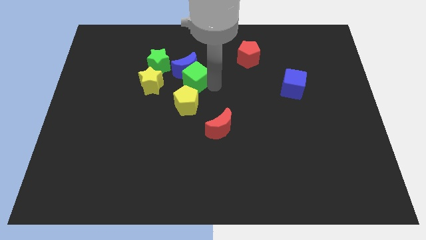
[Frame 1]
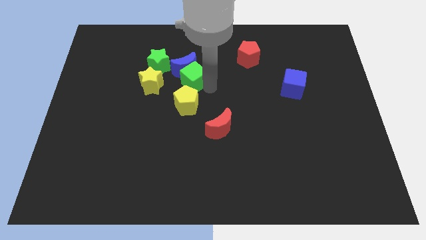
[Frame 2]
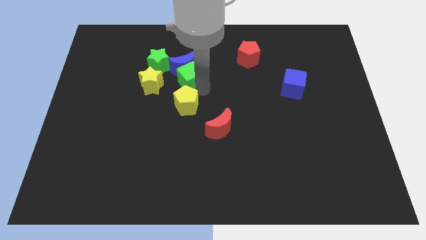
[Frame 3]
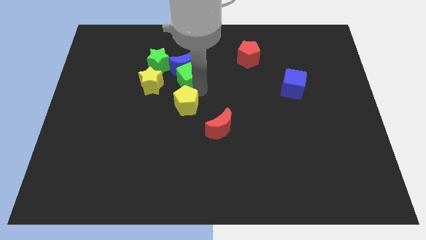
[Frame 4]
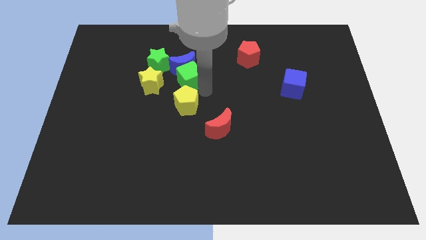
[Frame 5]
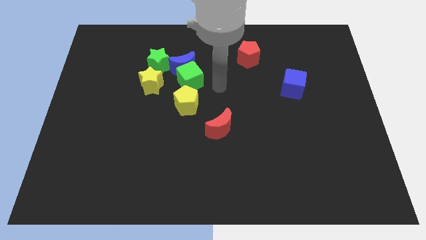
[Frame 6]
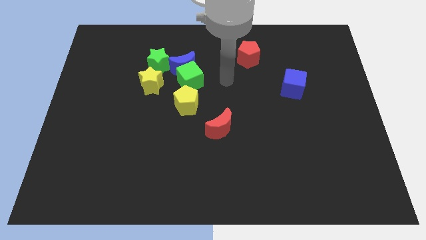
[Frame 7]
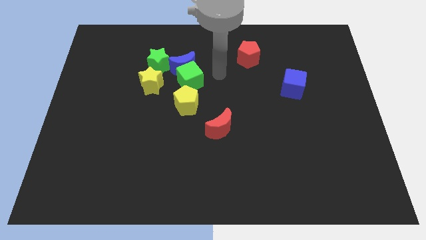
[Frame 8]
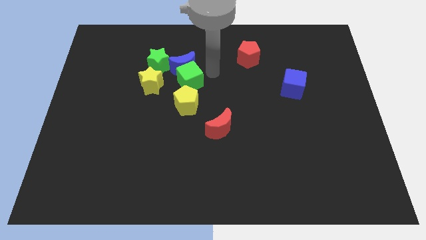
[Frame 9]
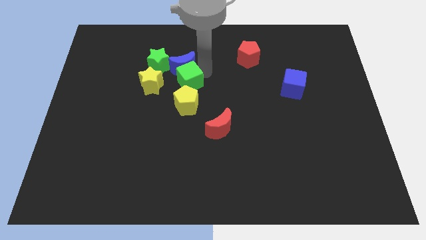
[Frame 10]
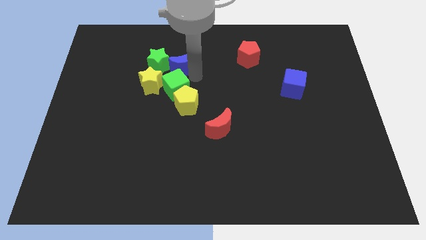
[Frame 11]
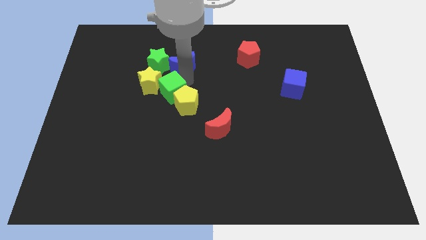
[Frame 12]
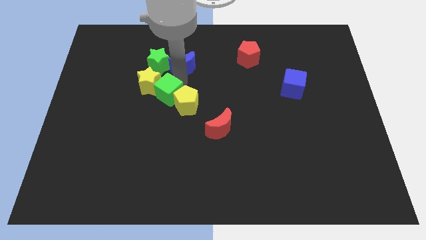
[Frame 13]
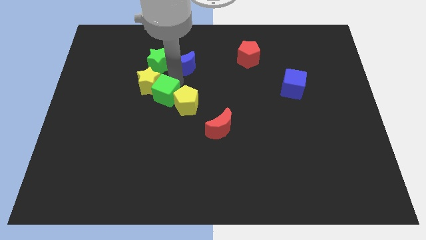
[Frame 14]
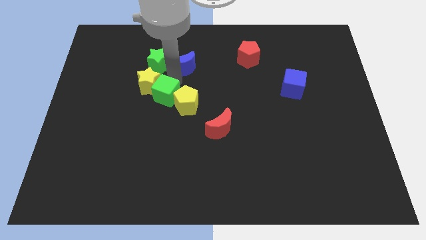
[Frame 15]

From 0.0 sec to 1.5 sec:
place green cube to the left of yellow pentagon

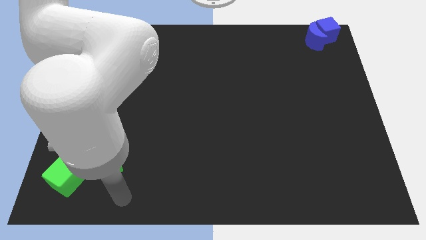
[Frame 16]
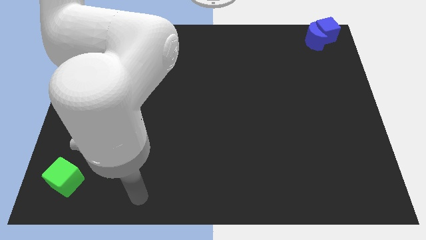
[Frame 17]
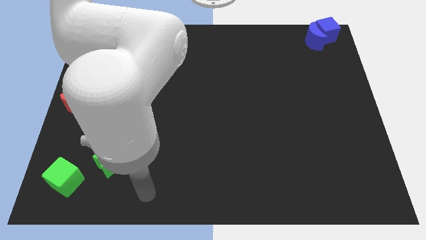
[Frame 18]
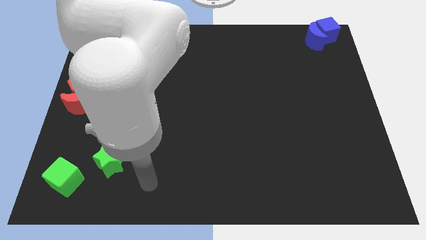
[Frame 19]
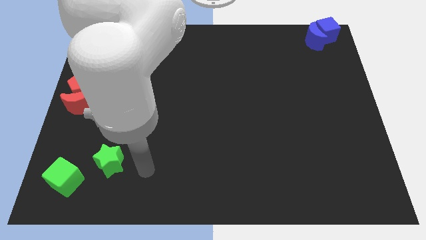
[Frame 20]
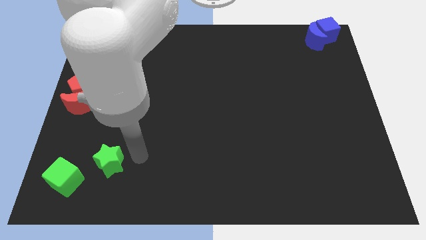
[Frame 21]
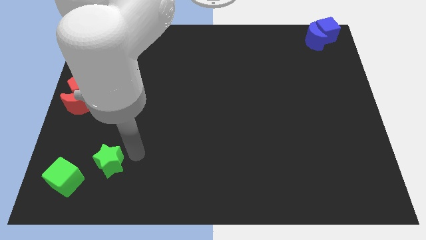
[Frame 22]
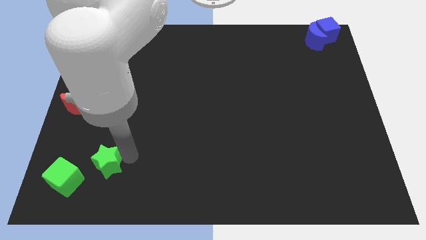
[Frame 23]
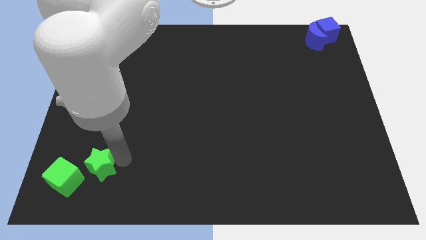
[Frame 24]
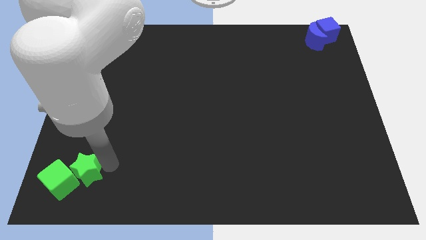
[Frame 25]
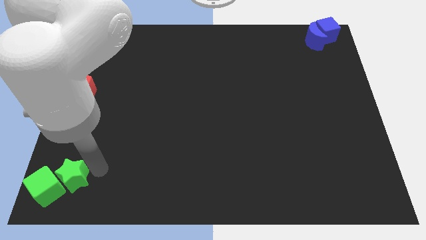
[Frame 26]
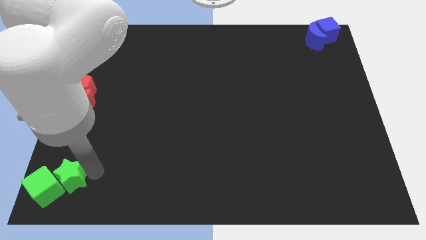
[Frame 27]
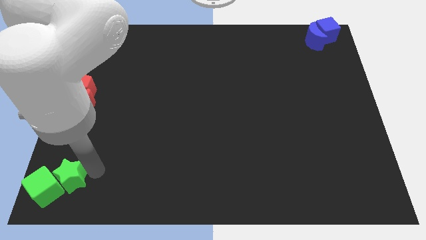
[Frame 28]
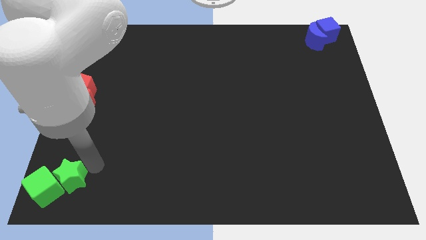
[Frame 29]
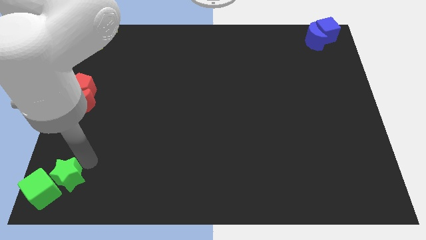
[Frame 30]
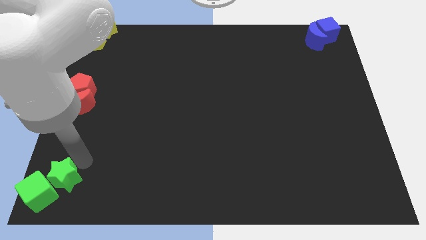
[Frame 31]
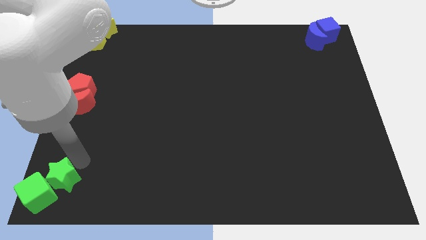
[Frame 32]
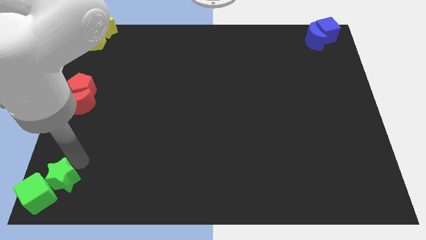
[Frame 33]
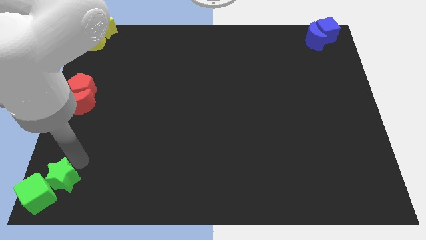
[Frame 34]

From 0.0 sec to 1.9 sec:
move the green star and the green cube to the bottom left corner

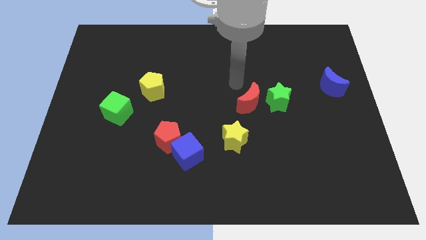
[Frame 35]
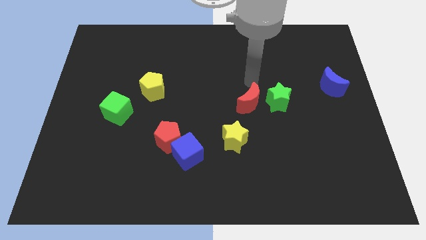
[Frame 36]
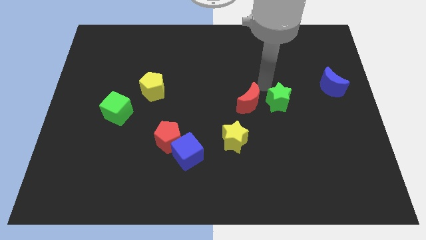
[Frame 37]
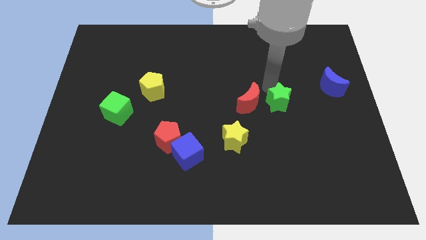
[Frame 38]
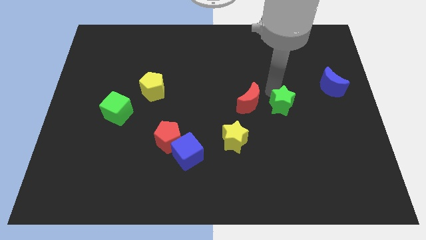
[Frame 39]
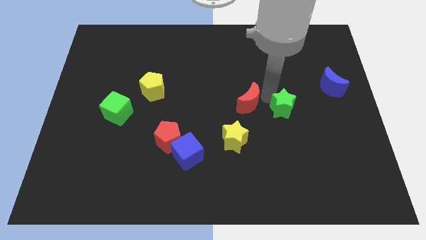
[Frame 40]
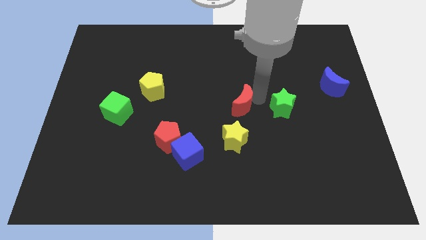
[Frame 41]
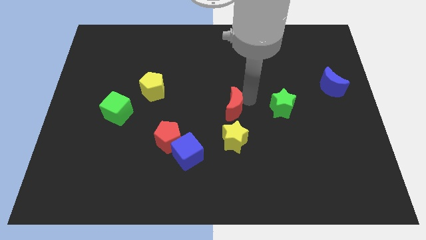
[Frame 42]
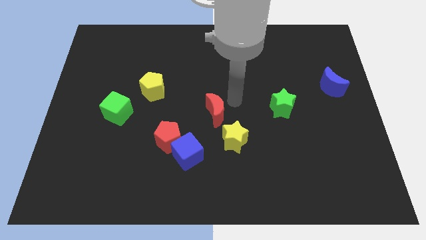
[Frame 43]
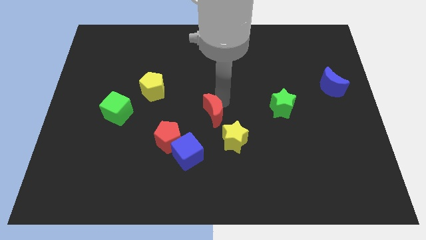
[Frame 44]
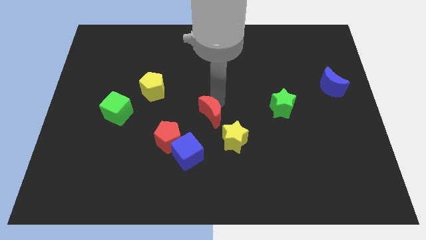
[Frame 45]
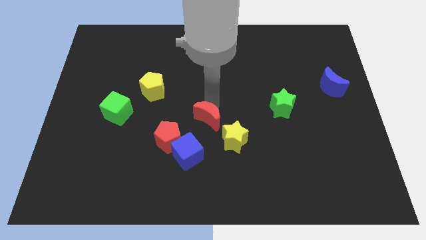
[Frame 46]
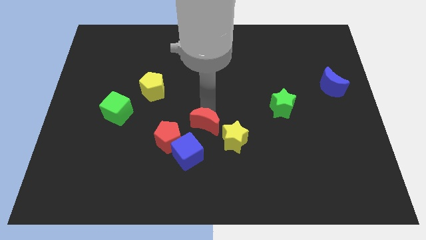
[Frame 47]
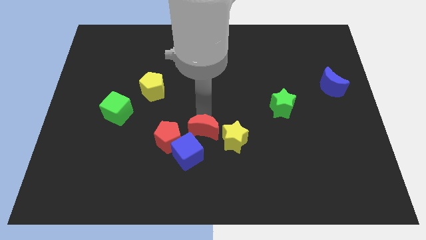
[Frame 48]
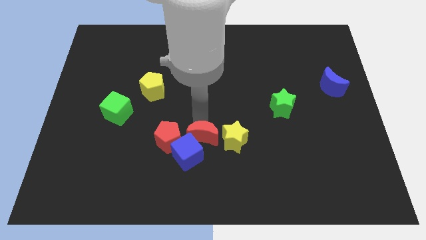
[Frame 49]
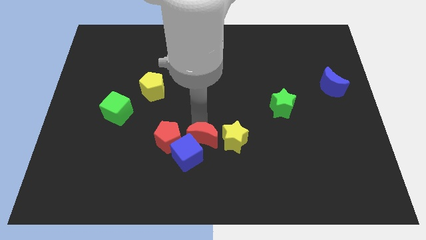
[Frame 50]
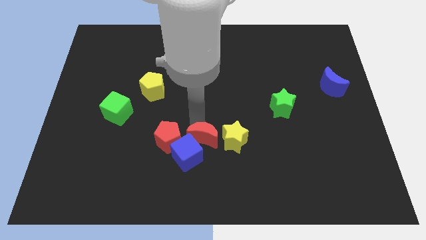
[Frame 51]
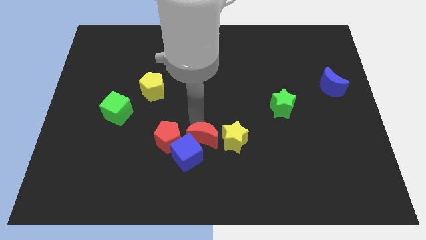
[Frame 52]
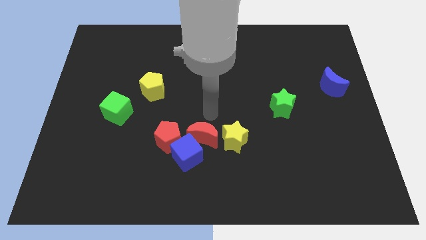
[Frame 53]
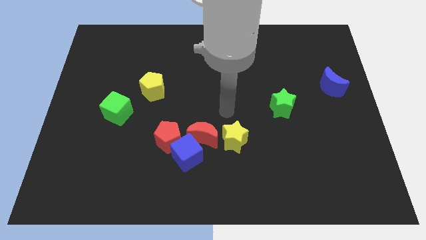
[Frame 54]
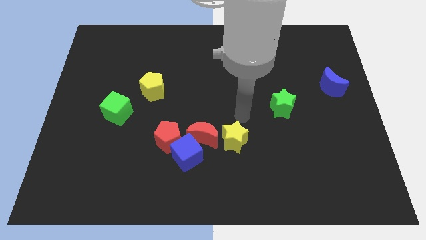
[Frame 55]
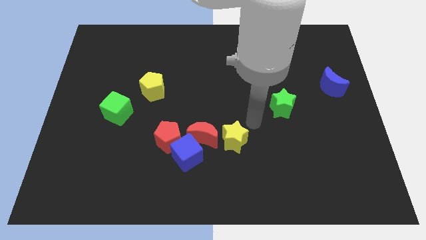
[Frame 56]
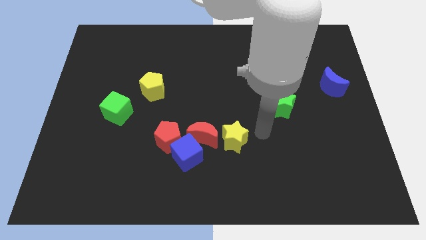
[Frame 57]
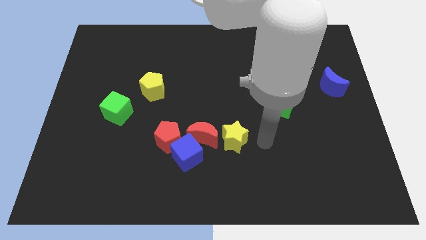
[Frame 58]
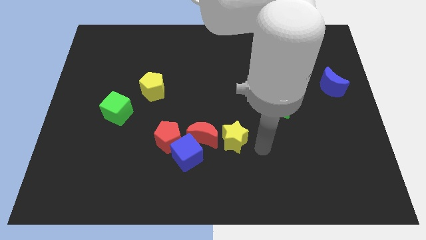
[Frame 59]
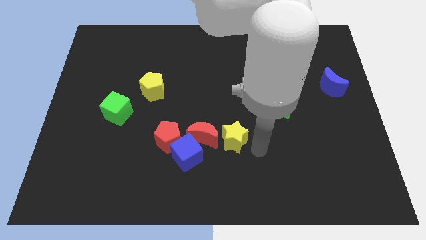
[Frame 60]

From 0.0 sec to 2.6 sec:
move the red crescent in between yellow star and red pentagon

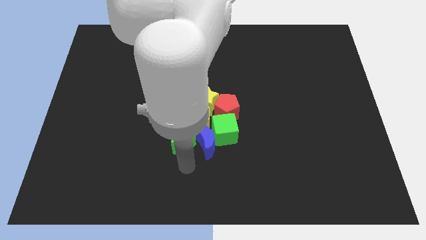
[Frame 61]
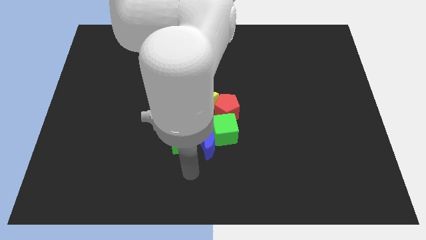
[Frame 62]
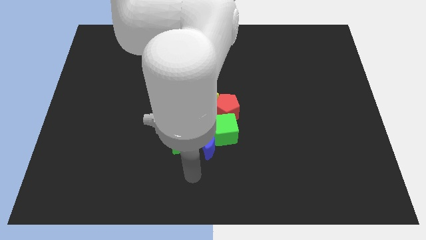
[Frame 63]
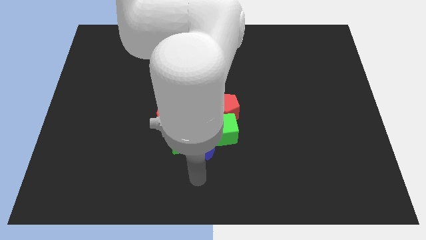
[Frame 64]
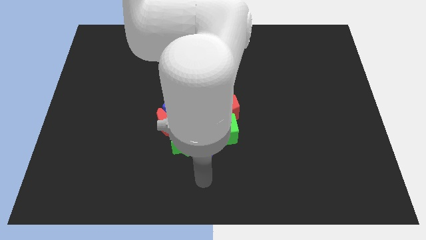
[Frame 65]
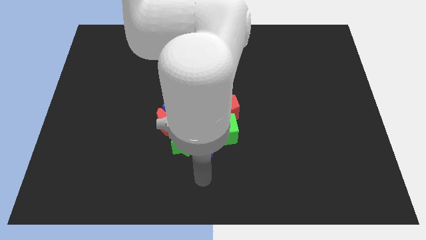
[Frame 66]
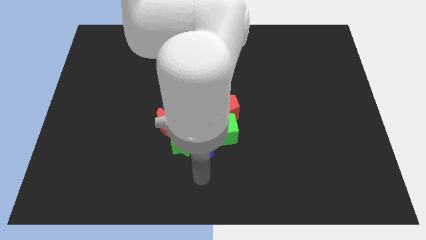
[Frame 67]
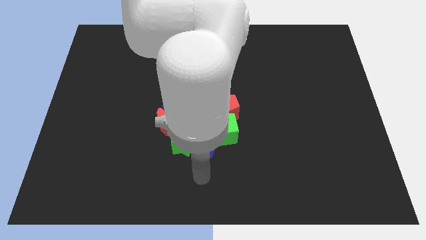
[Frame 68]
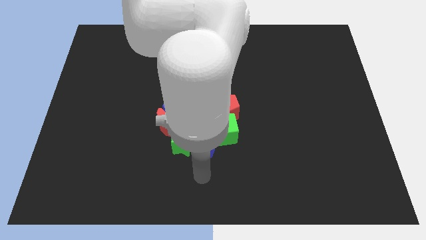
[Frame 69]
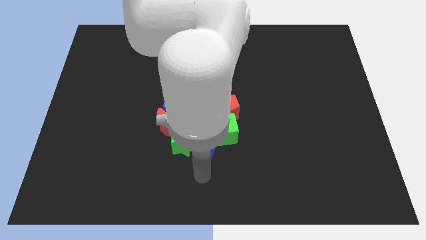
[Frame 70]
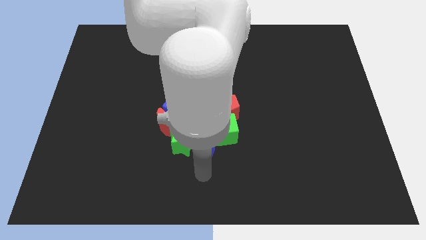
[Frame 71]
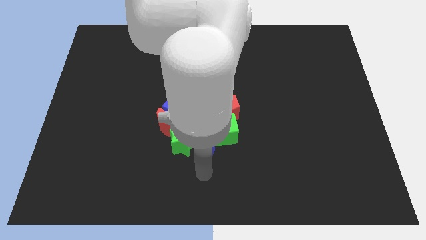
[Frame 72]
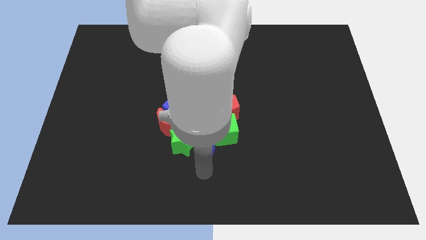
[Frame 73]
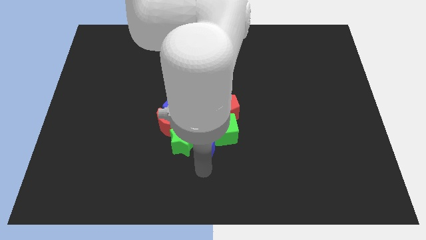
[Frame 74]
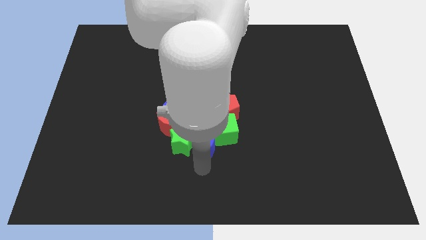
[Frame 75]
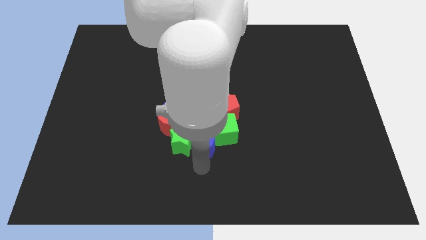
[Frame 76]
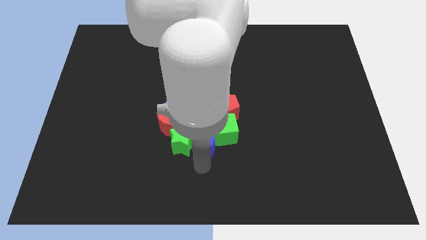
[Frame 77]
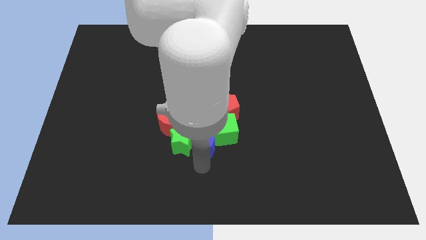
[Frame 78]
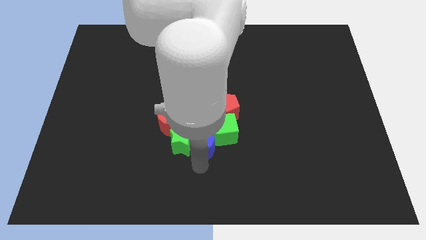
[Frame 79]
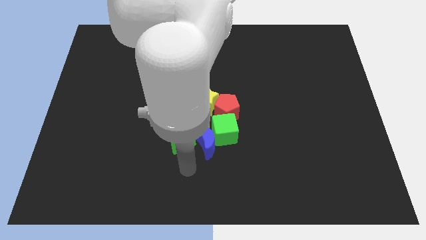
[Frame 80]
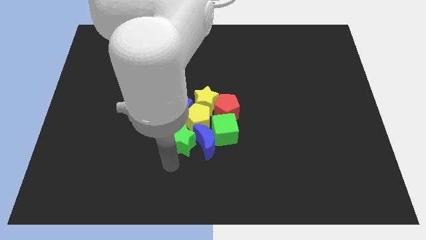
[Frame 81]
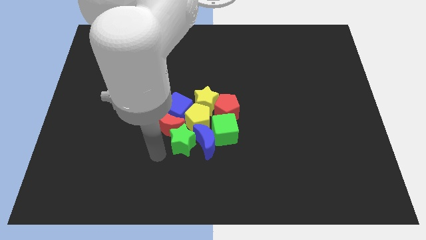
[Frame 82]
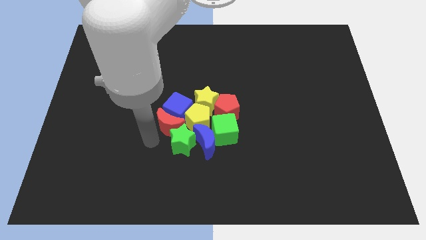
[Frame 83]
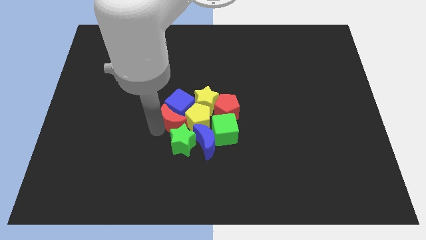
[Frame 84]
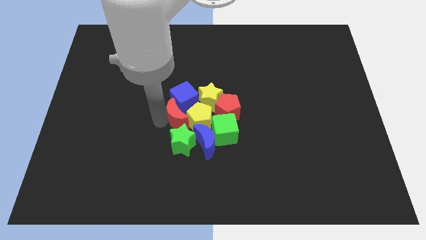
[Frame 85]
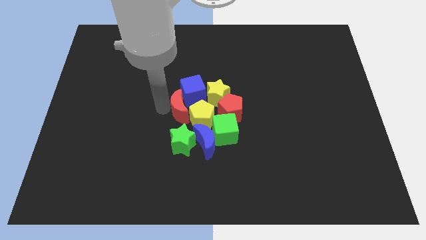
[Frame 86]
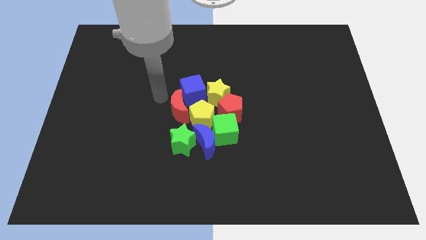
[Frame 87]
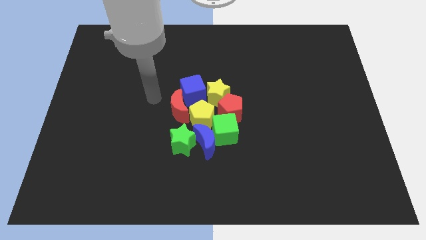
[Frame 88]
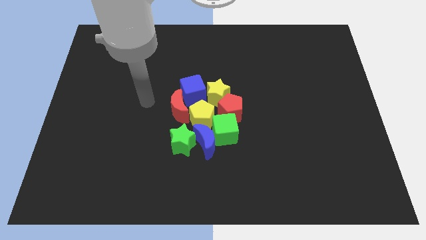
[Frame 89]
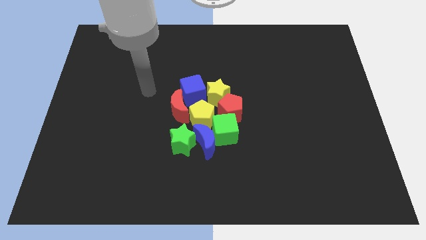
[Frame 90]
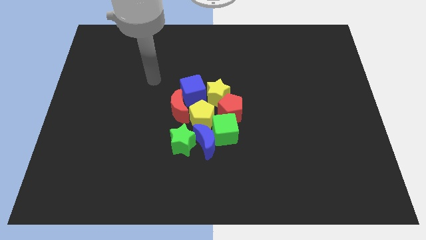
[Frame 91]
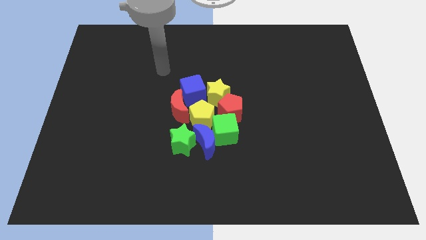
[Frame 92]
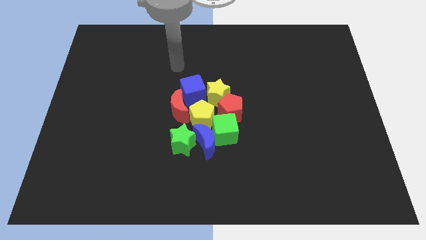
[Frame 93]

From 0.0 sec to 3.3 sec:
move the blue cube to the top of the yellow pentagon
